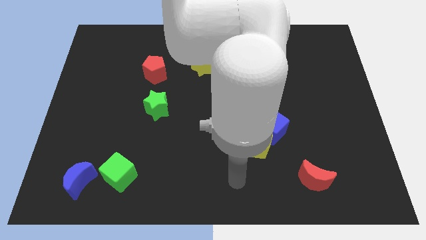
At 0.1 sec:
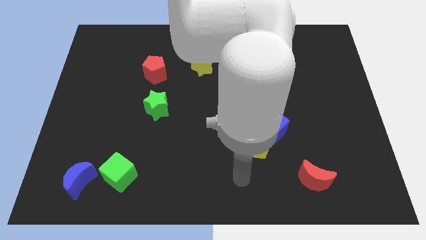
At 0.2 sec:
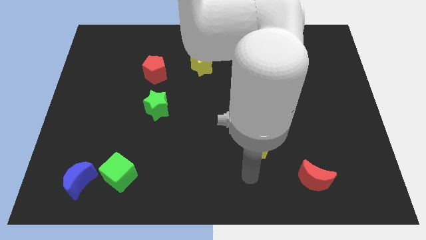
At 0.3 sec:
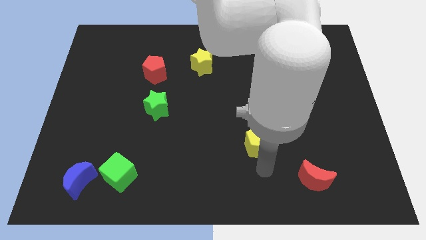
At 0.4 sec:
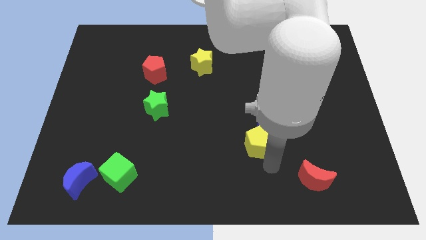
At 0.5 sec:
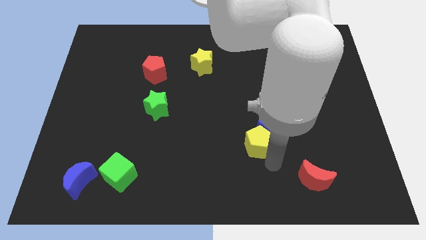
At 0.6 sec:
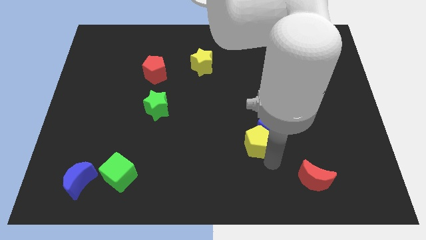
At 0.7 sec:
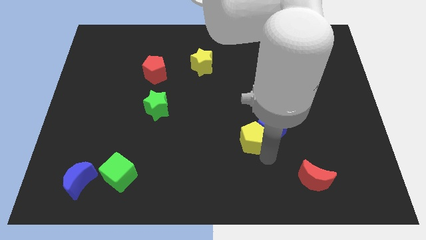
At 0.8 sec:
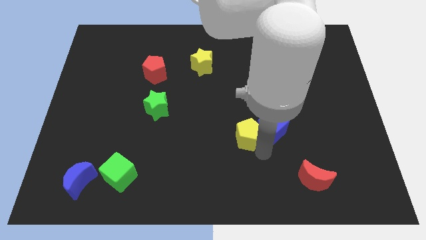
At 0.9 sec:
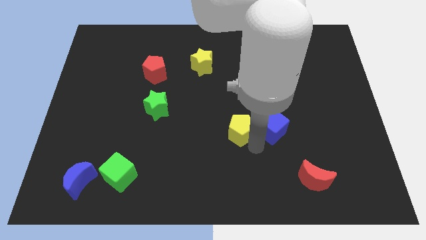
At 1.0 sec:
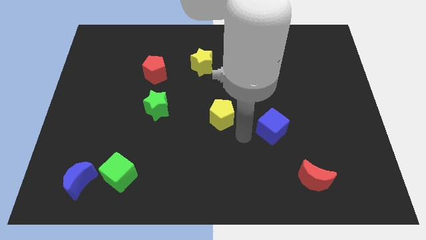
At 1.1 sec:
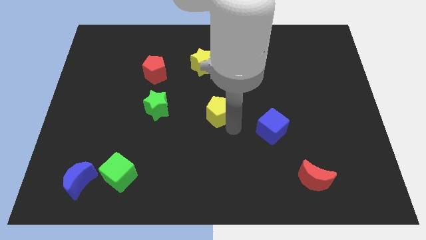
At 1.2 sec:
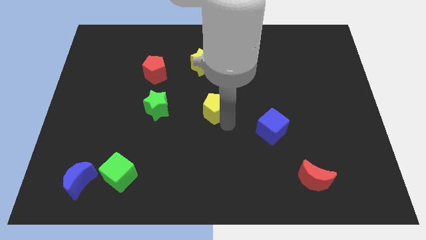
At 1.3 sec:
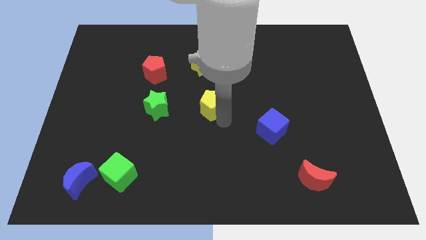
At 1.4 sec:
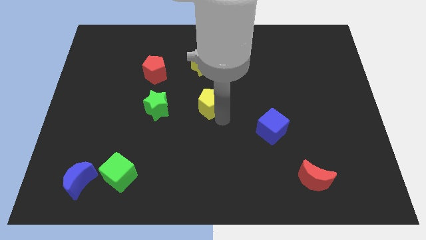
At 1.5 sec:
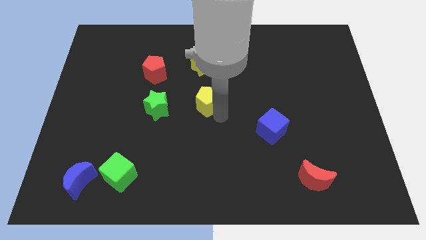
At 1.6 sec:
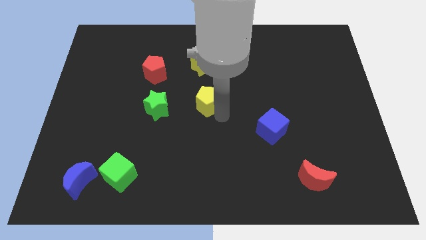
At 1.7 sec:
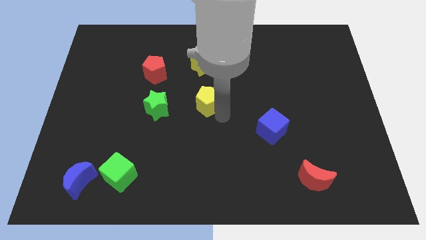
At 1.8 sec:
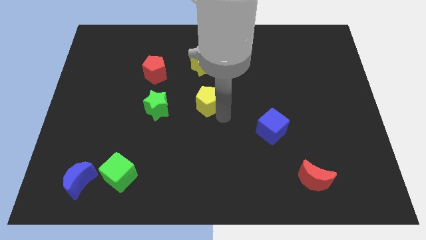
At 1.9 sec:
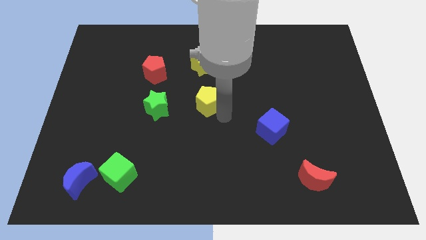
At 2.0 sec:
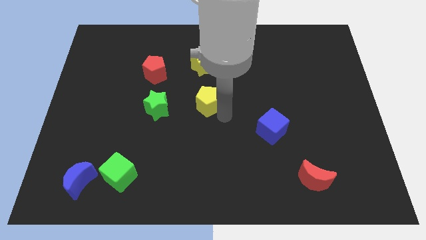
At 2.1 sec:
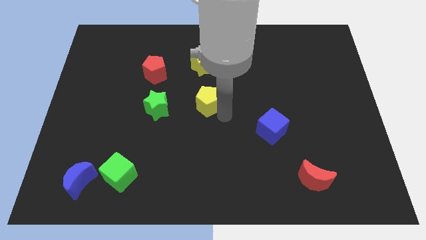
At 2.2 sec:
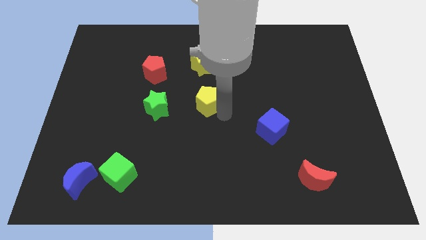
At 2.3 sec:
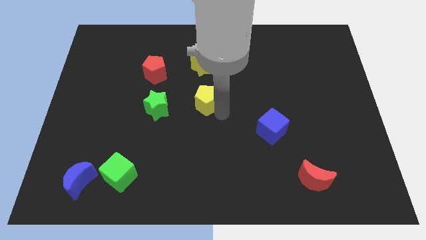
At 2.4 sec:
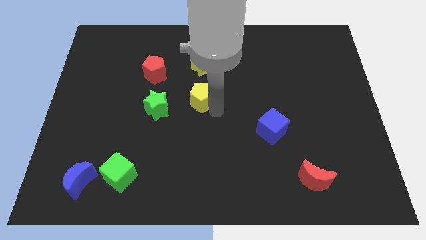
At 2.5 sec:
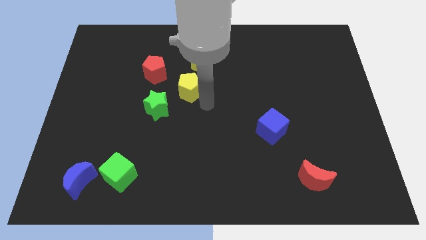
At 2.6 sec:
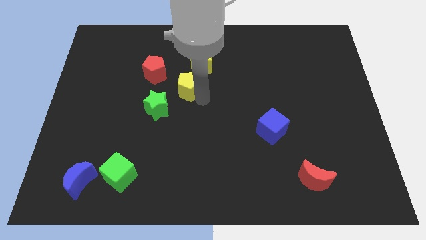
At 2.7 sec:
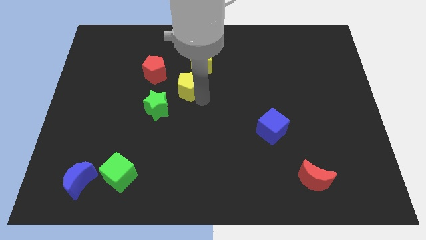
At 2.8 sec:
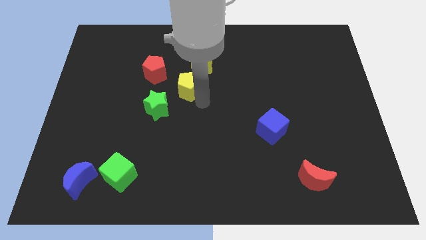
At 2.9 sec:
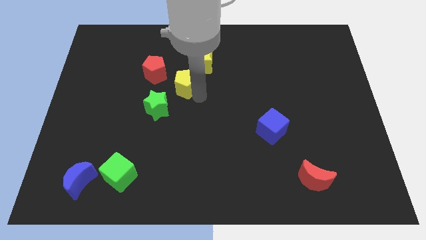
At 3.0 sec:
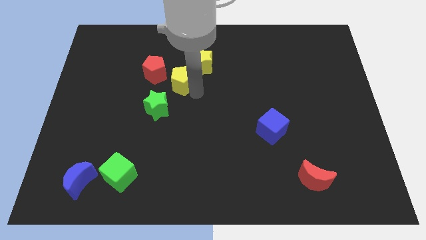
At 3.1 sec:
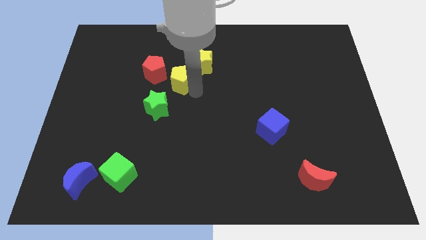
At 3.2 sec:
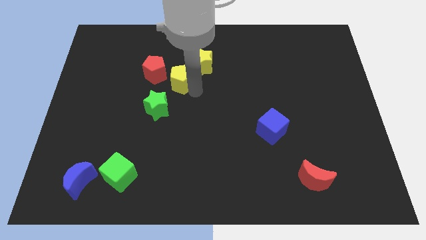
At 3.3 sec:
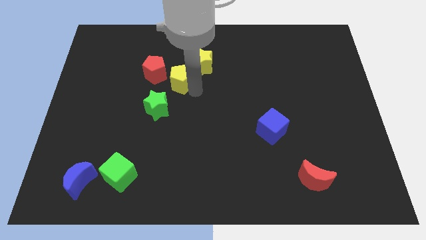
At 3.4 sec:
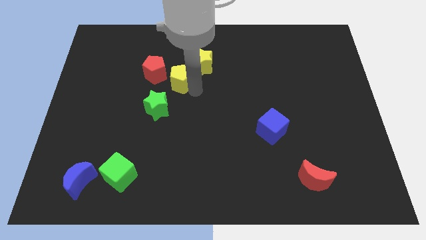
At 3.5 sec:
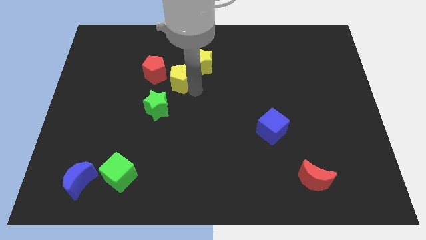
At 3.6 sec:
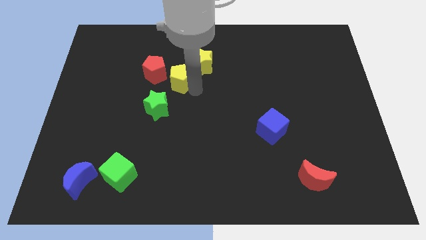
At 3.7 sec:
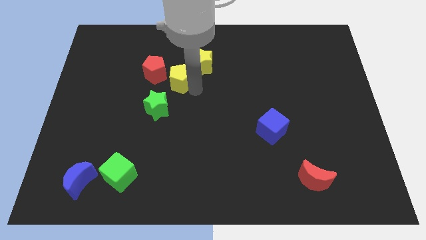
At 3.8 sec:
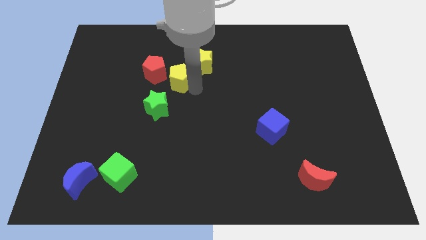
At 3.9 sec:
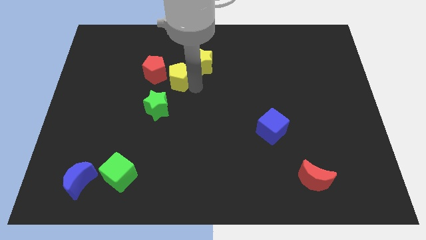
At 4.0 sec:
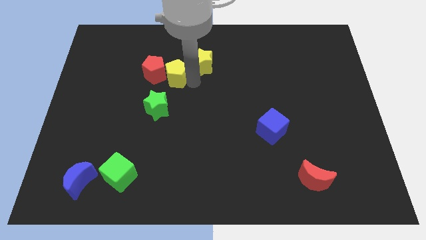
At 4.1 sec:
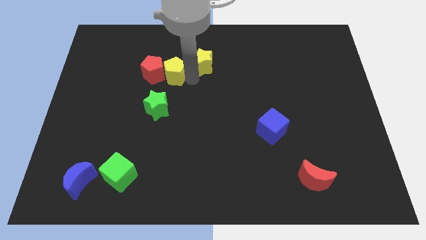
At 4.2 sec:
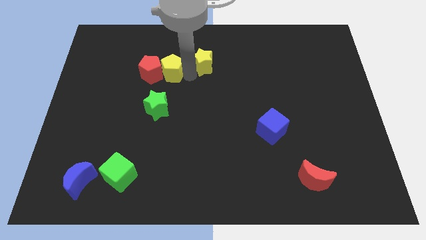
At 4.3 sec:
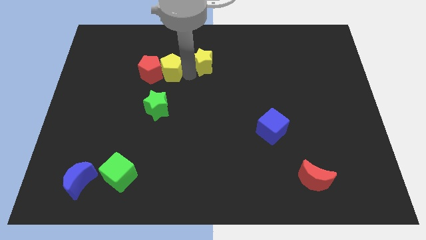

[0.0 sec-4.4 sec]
place the yellow pentagon in between the red pentagon and the yellow star

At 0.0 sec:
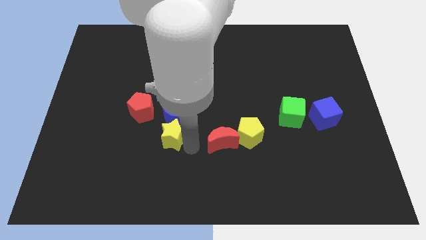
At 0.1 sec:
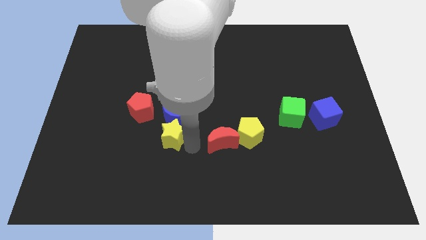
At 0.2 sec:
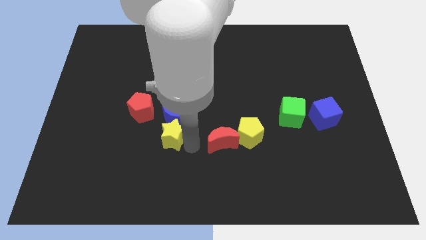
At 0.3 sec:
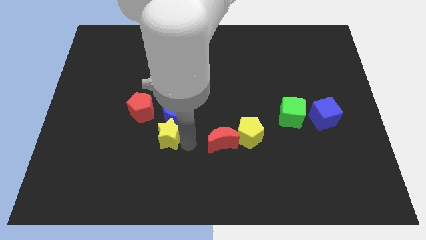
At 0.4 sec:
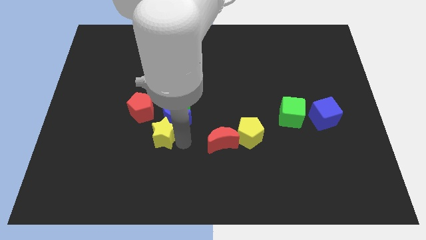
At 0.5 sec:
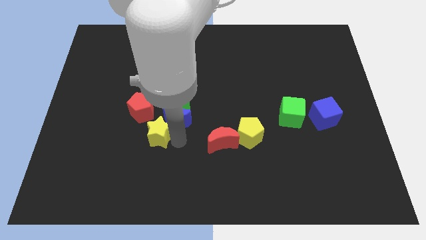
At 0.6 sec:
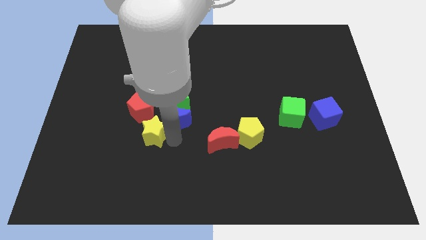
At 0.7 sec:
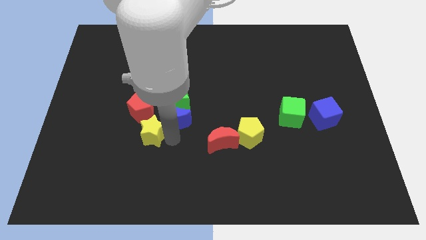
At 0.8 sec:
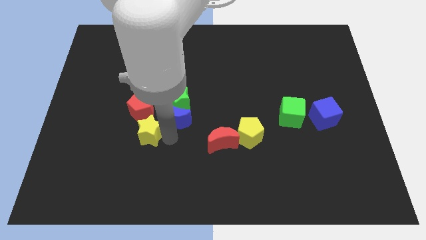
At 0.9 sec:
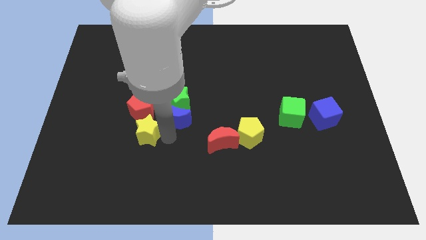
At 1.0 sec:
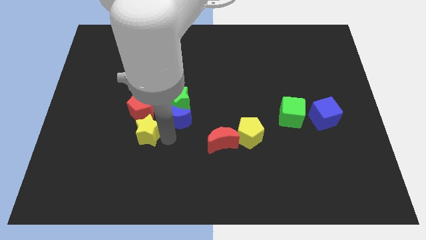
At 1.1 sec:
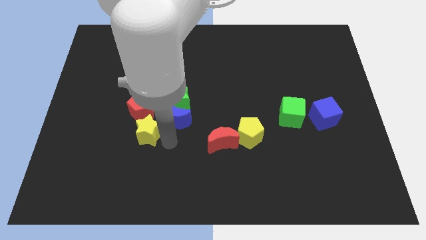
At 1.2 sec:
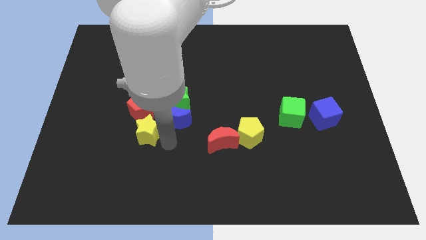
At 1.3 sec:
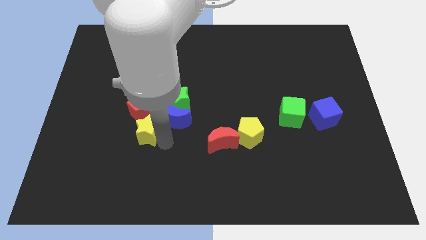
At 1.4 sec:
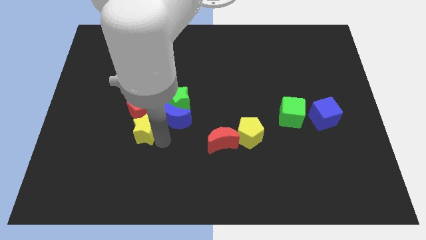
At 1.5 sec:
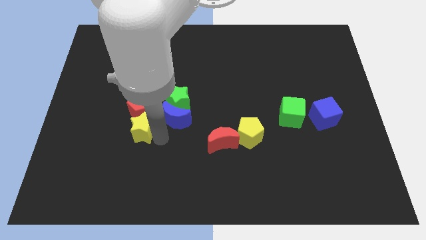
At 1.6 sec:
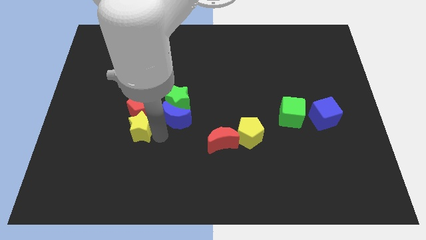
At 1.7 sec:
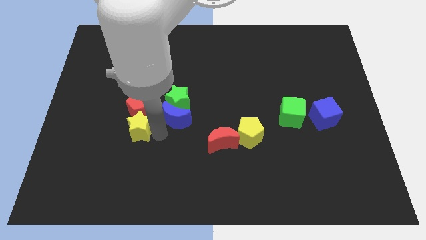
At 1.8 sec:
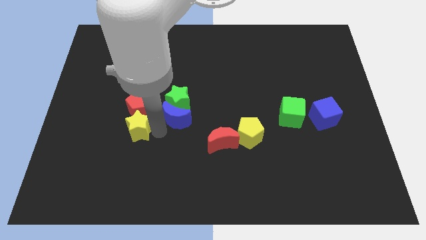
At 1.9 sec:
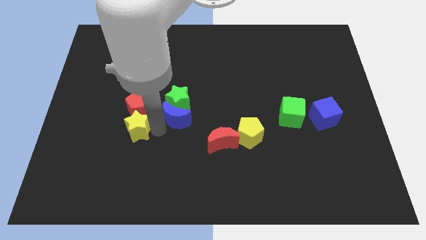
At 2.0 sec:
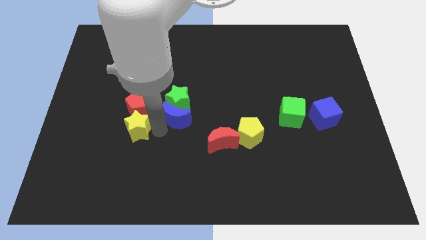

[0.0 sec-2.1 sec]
push yellow star into red pentagon

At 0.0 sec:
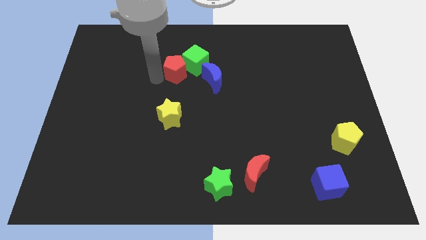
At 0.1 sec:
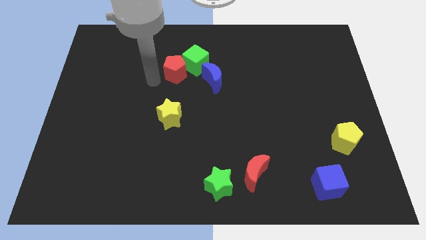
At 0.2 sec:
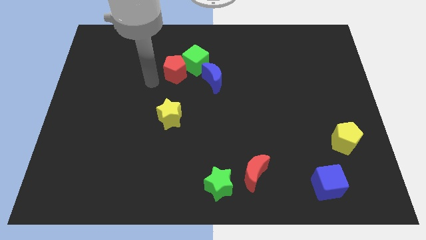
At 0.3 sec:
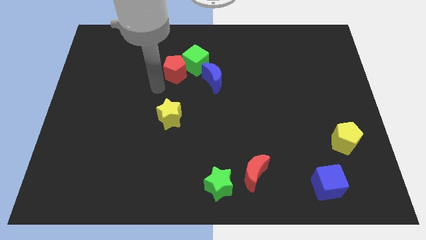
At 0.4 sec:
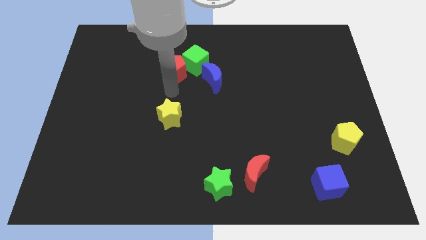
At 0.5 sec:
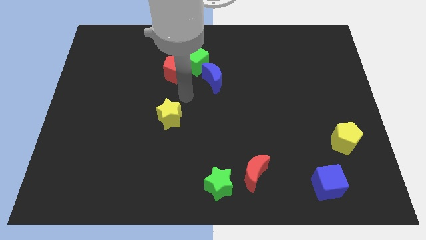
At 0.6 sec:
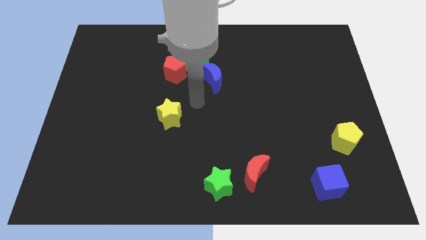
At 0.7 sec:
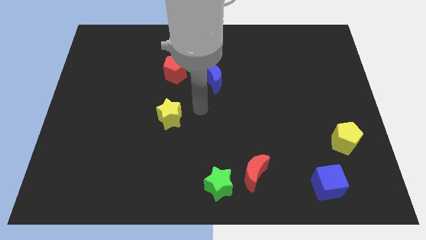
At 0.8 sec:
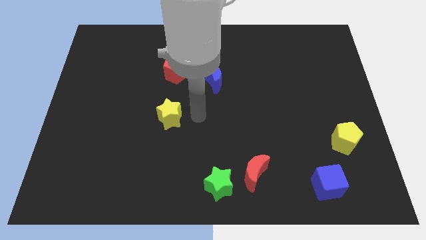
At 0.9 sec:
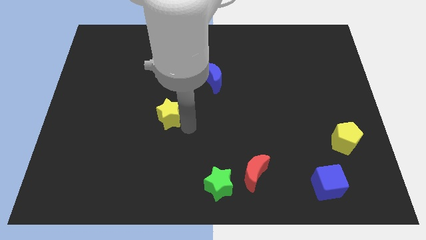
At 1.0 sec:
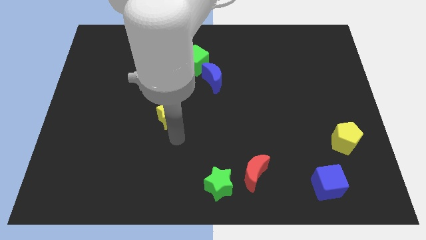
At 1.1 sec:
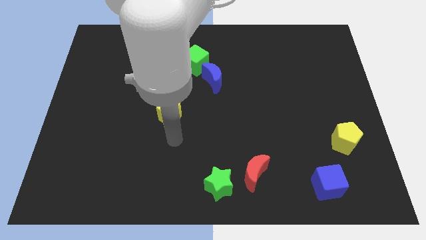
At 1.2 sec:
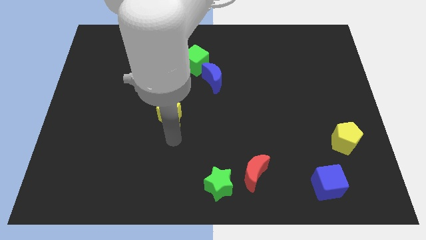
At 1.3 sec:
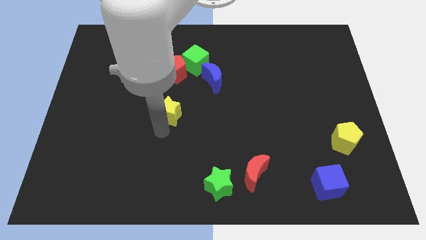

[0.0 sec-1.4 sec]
place the arm down to the yellow star

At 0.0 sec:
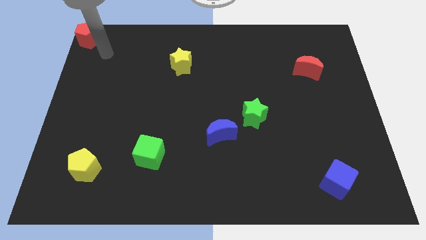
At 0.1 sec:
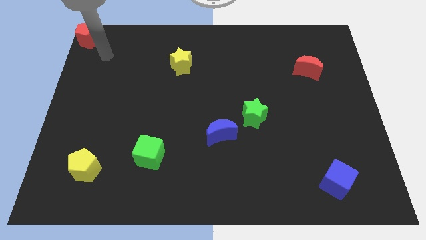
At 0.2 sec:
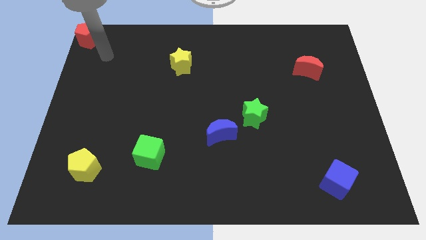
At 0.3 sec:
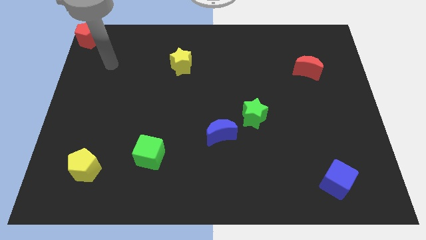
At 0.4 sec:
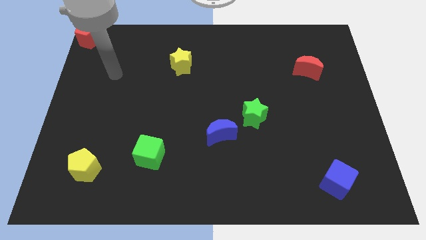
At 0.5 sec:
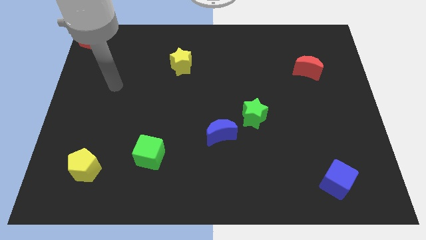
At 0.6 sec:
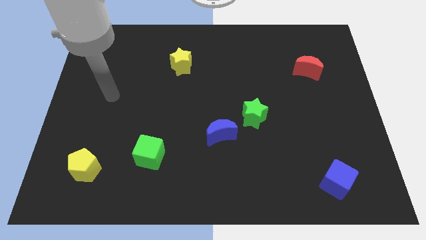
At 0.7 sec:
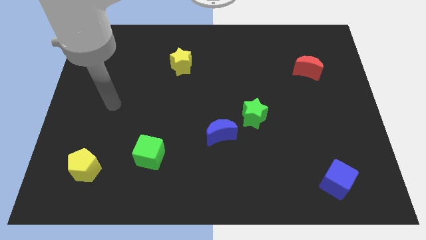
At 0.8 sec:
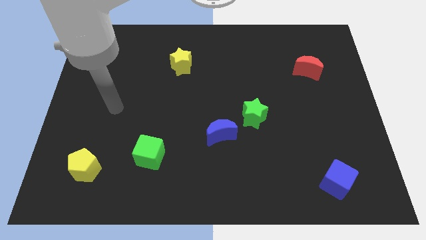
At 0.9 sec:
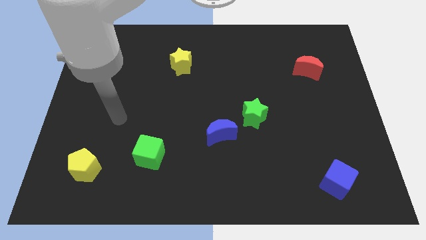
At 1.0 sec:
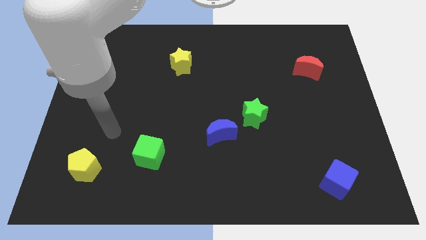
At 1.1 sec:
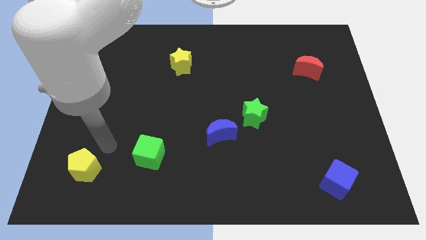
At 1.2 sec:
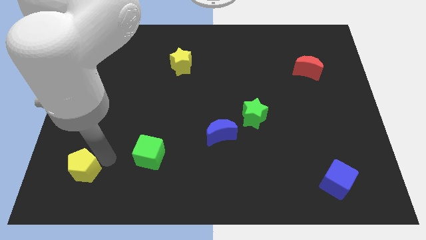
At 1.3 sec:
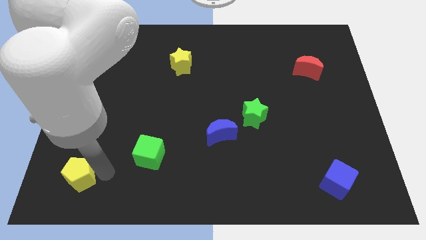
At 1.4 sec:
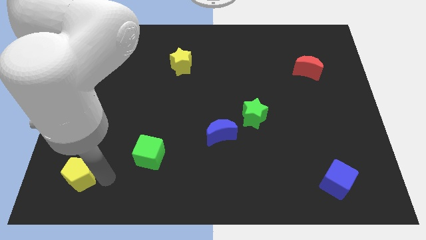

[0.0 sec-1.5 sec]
slightly push the yellow pentagon to the bottom left corner
